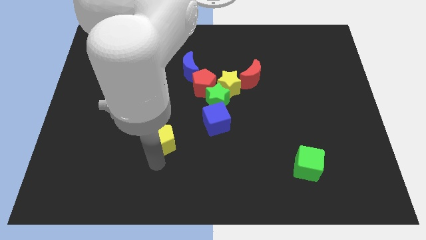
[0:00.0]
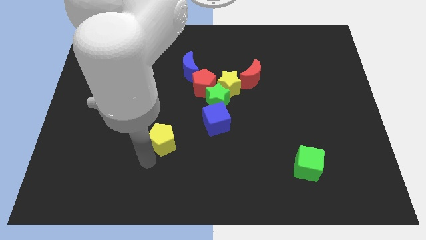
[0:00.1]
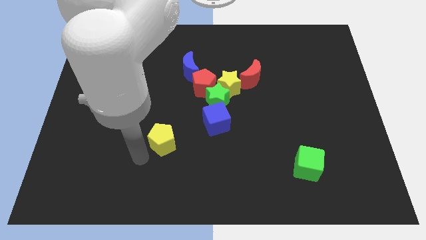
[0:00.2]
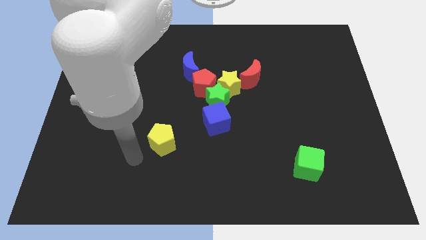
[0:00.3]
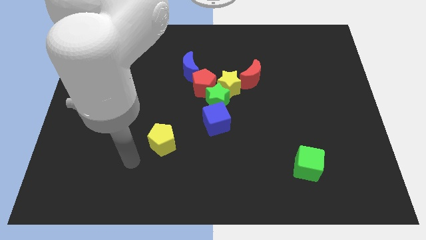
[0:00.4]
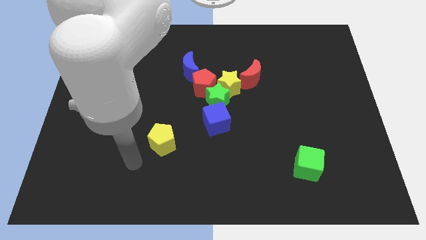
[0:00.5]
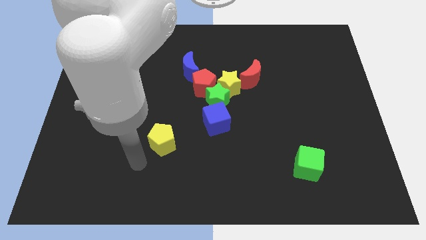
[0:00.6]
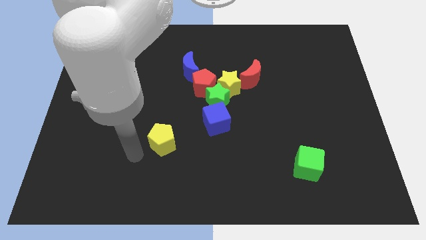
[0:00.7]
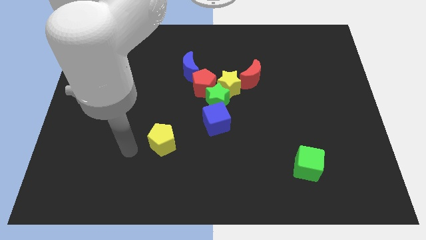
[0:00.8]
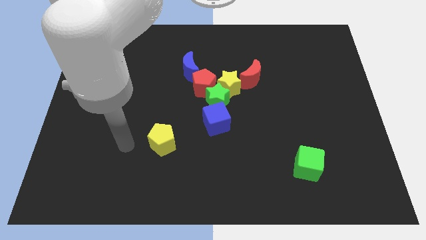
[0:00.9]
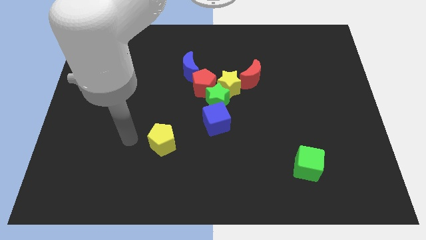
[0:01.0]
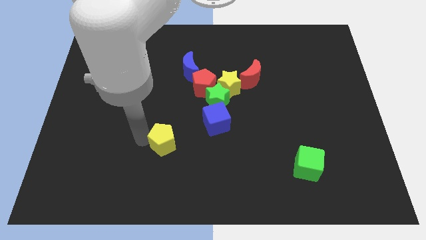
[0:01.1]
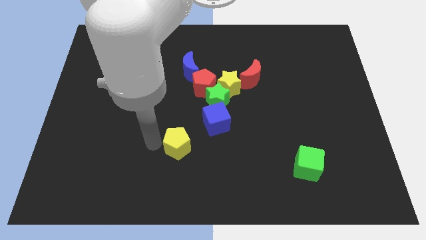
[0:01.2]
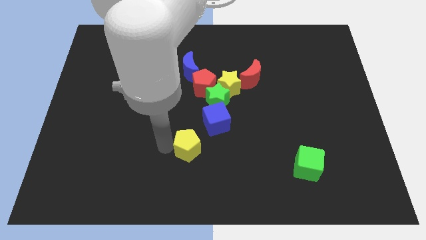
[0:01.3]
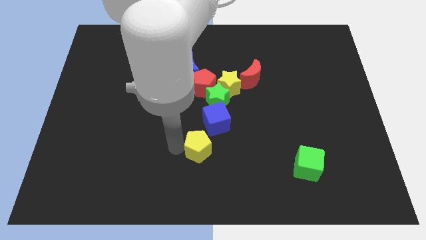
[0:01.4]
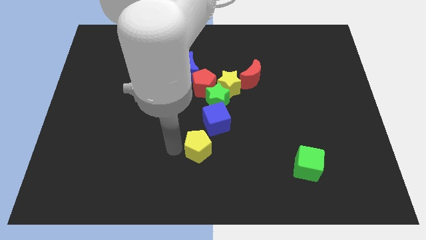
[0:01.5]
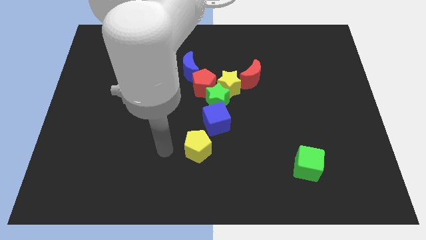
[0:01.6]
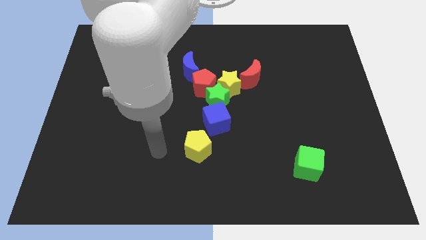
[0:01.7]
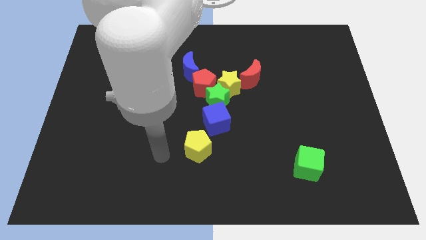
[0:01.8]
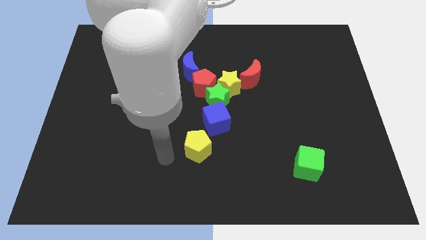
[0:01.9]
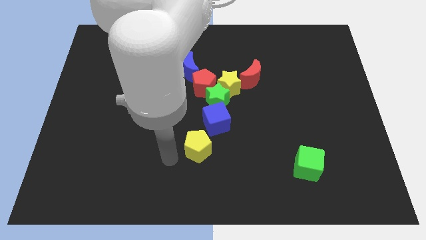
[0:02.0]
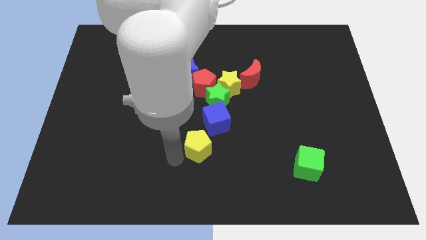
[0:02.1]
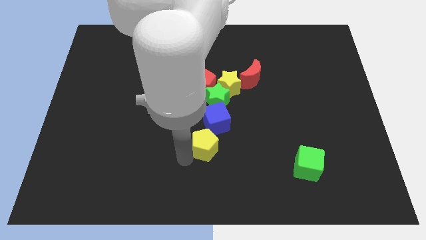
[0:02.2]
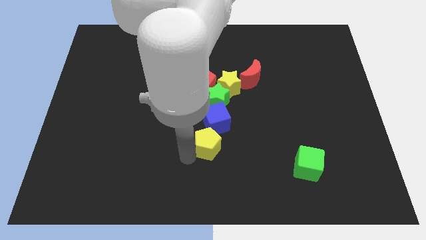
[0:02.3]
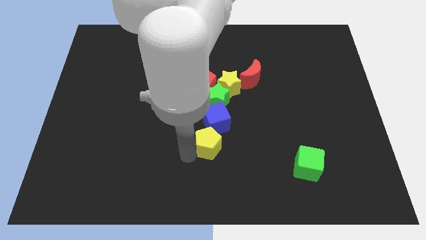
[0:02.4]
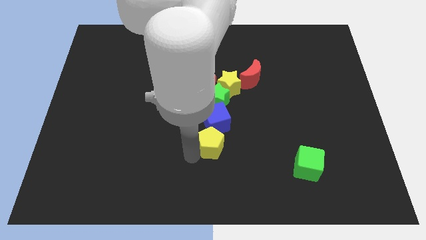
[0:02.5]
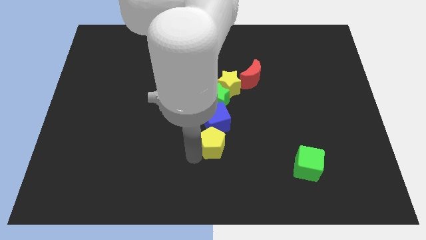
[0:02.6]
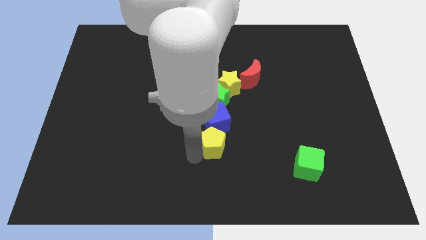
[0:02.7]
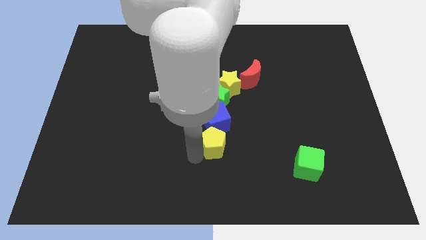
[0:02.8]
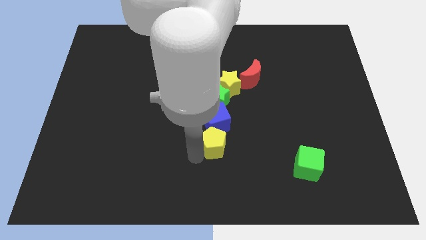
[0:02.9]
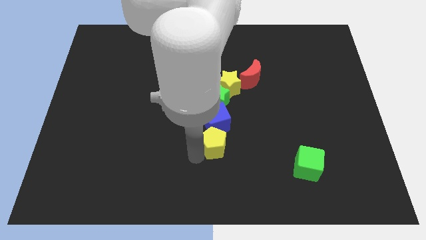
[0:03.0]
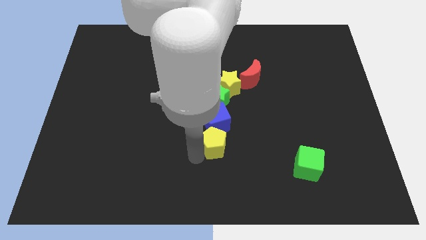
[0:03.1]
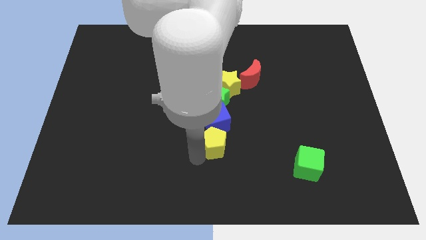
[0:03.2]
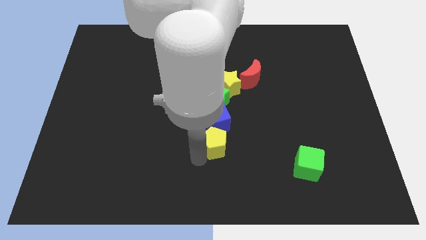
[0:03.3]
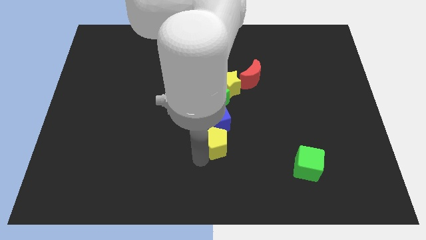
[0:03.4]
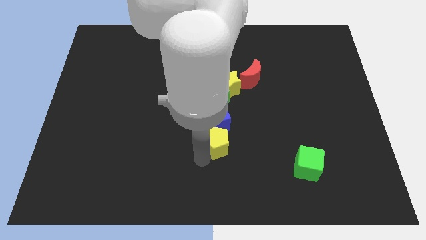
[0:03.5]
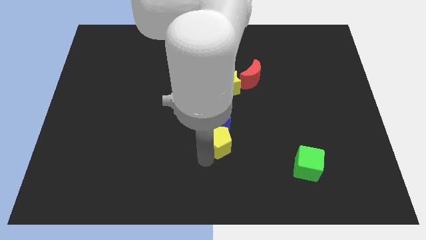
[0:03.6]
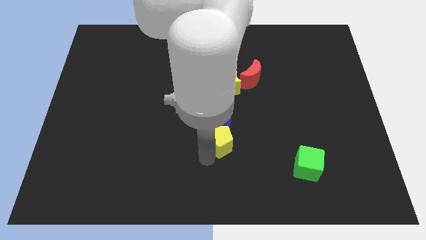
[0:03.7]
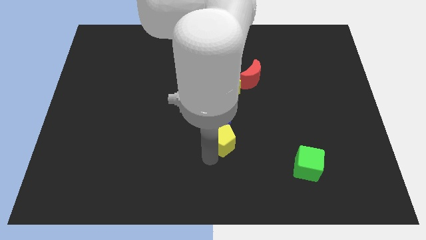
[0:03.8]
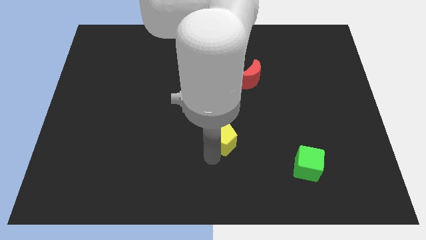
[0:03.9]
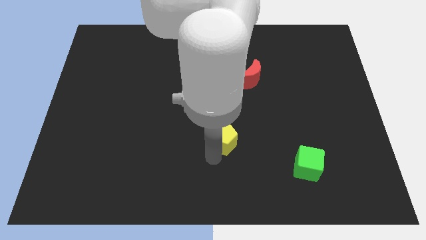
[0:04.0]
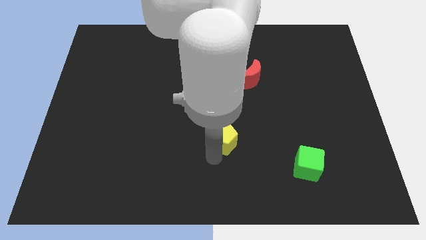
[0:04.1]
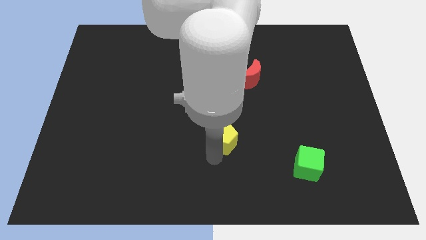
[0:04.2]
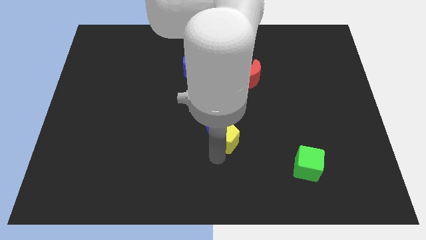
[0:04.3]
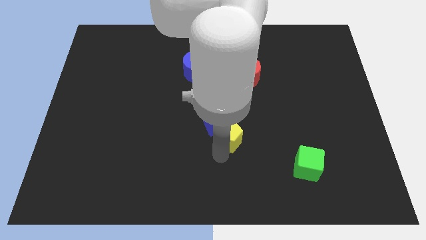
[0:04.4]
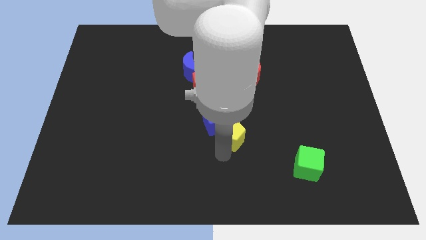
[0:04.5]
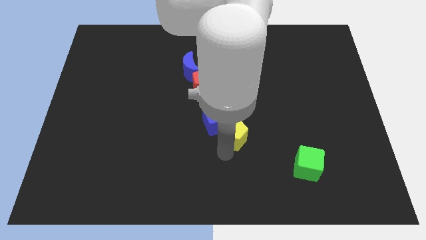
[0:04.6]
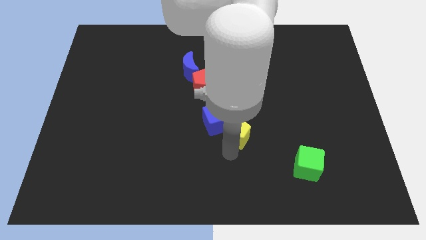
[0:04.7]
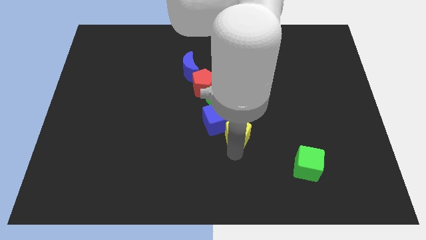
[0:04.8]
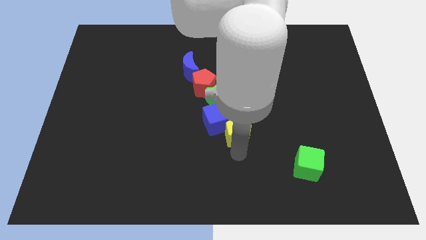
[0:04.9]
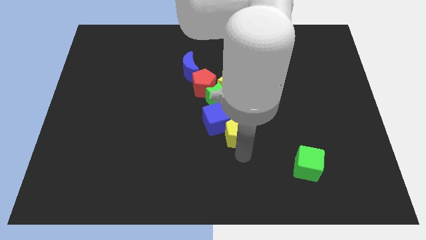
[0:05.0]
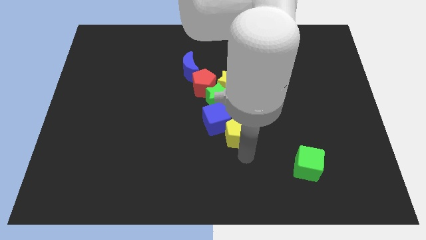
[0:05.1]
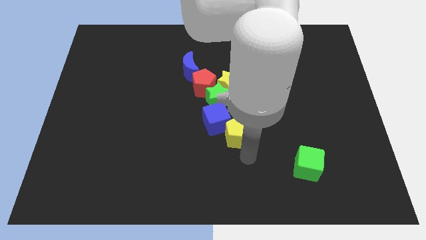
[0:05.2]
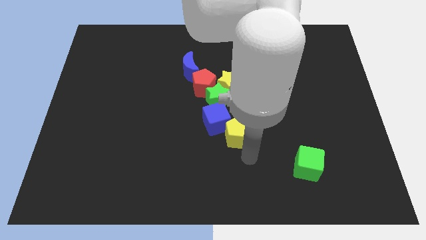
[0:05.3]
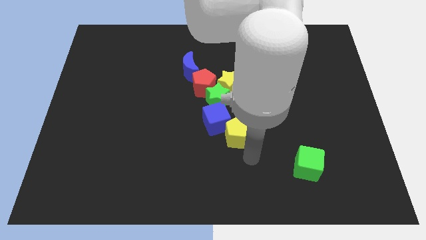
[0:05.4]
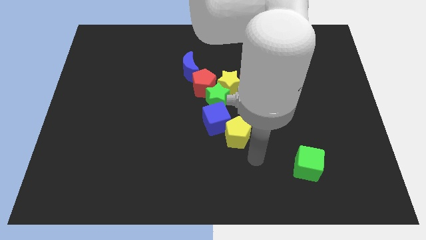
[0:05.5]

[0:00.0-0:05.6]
push yellow pentagon to the bottom right of blue cube

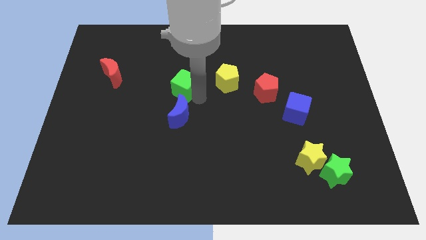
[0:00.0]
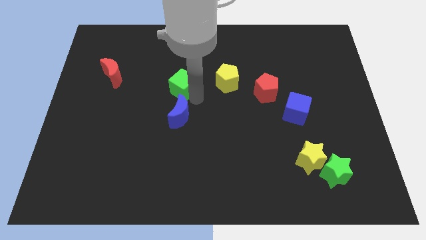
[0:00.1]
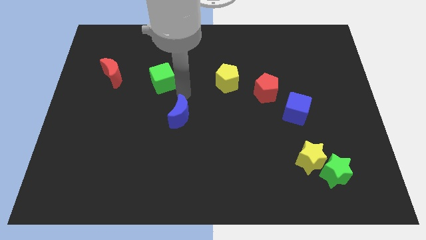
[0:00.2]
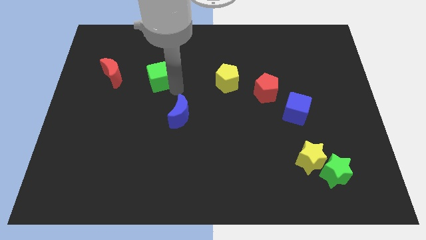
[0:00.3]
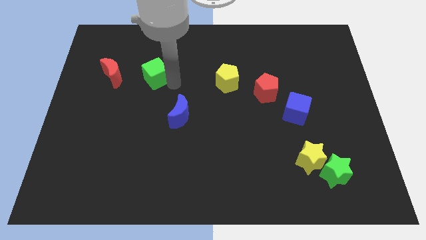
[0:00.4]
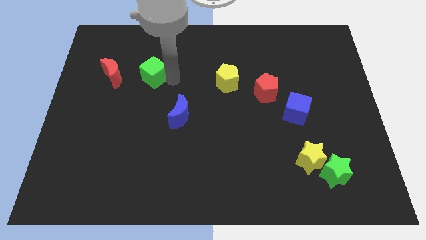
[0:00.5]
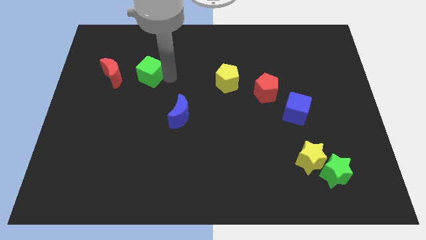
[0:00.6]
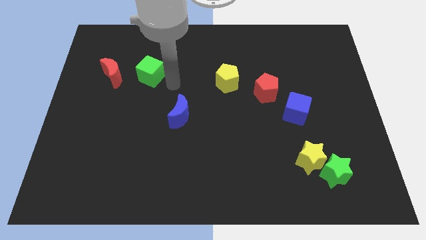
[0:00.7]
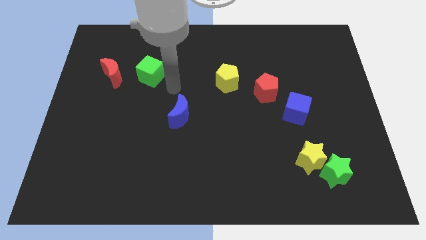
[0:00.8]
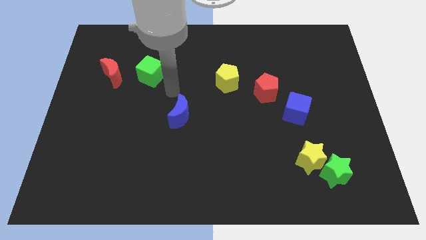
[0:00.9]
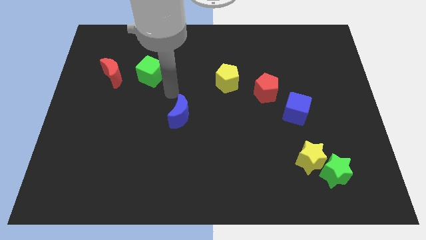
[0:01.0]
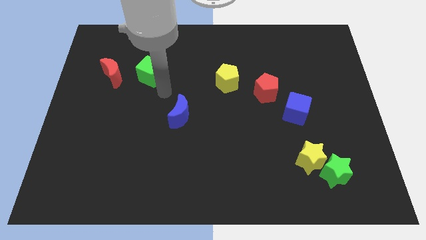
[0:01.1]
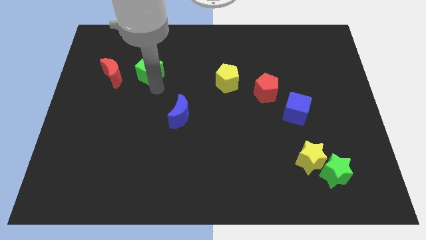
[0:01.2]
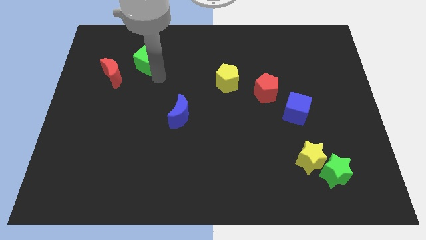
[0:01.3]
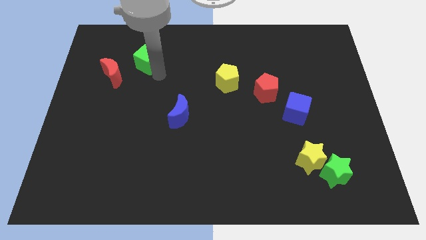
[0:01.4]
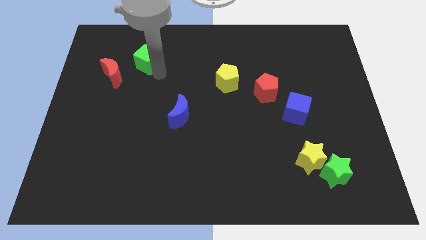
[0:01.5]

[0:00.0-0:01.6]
move the green cube to the right of red crescent

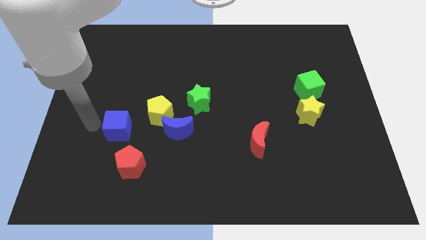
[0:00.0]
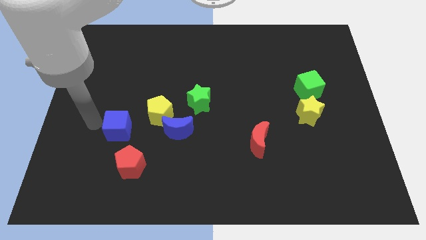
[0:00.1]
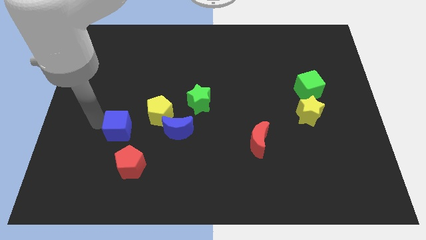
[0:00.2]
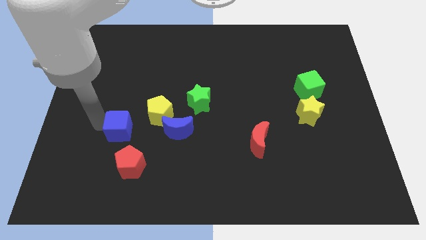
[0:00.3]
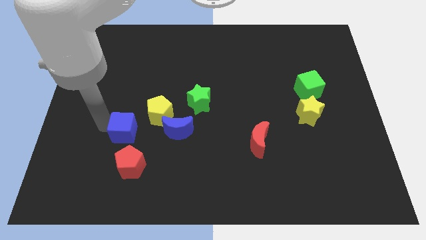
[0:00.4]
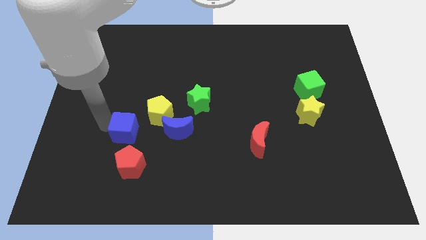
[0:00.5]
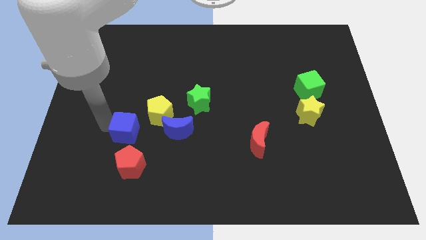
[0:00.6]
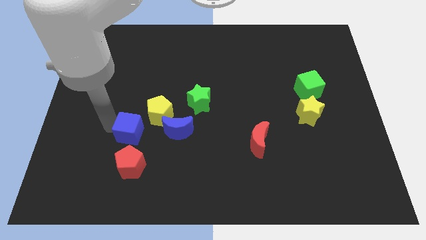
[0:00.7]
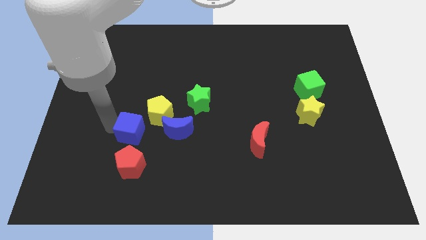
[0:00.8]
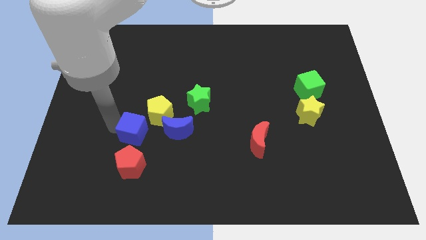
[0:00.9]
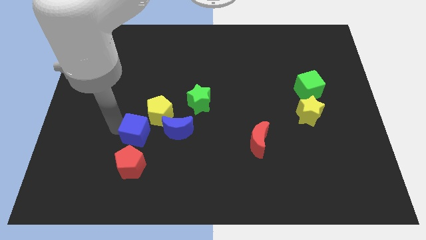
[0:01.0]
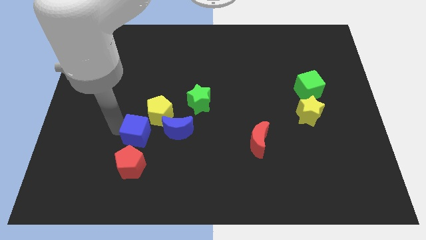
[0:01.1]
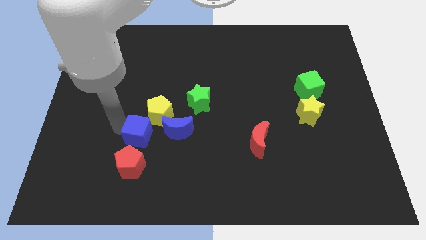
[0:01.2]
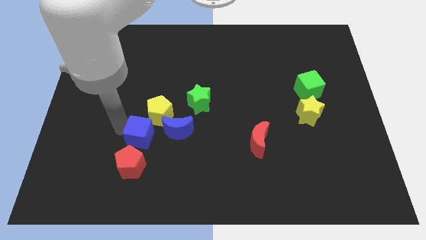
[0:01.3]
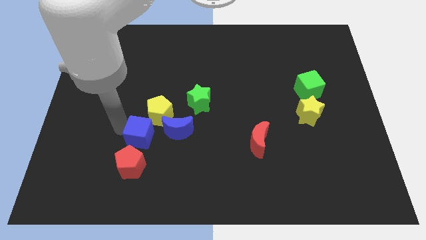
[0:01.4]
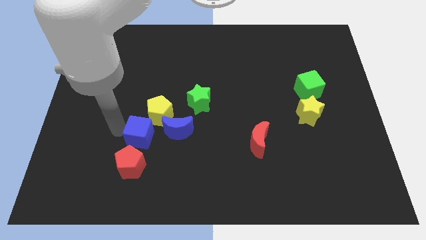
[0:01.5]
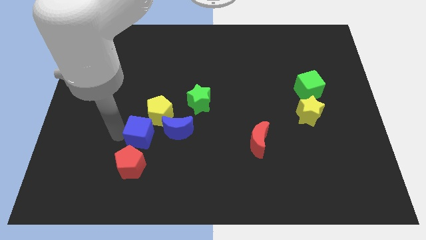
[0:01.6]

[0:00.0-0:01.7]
place the blue cube between the yellow pentagon and red pentagon

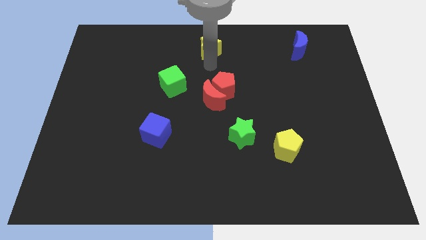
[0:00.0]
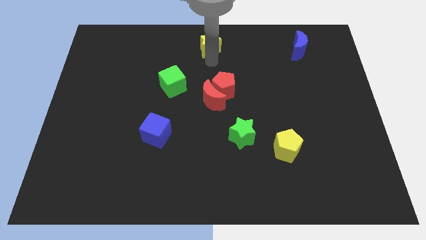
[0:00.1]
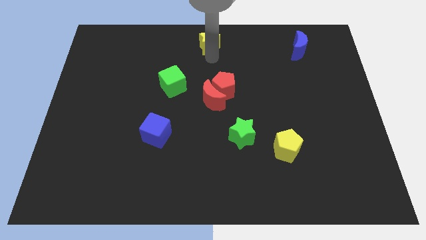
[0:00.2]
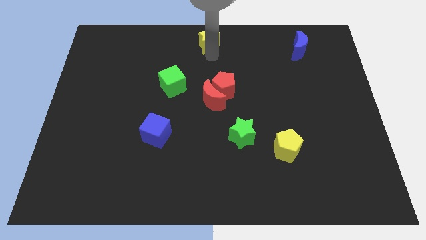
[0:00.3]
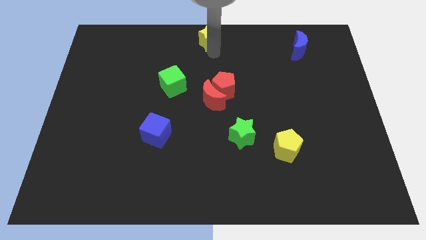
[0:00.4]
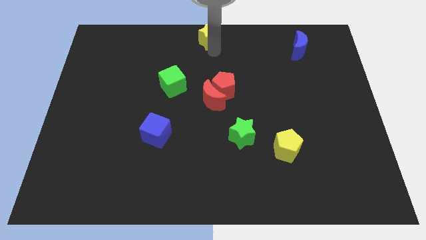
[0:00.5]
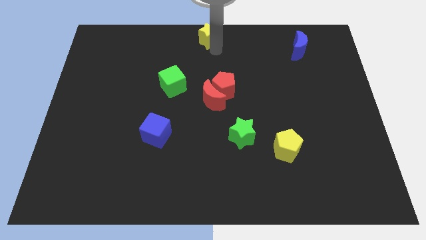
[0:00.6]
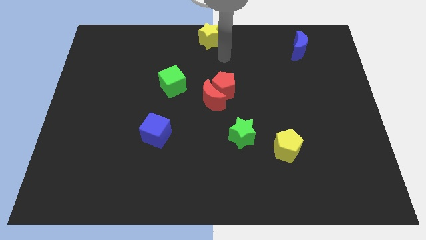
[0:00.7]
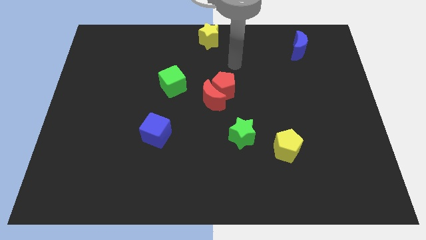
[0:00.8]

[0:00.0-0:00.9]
place the yellow star on the top middle of the board
